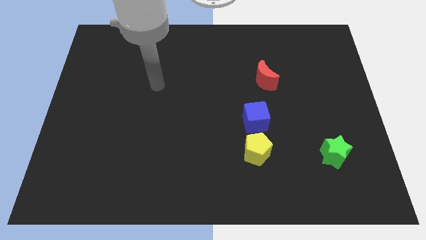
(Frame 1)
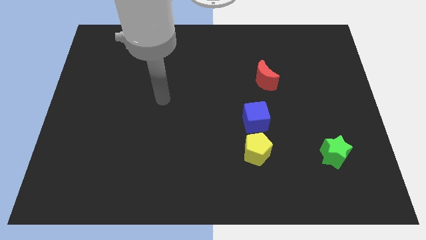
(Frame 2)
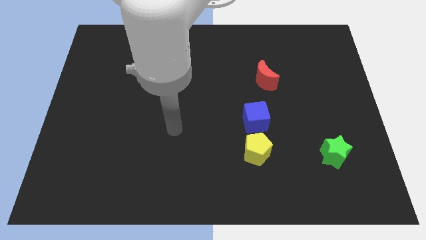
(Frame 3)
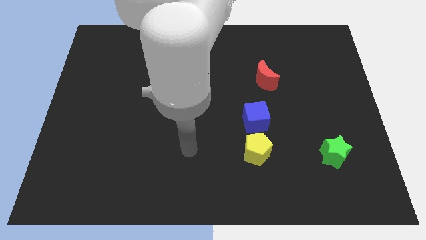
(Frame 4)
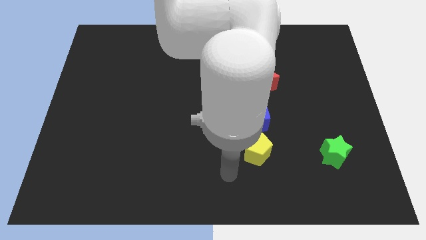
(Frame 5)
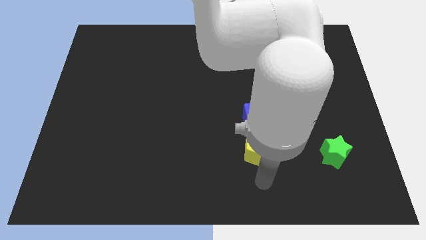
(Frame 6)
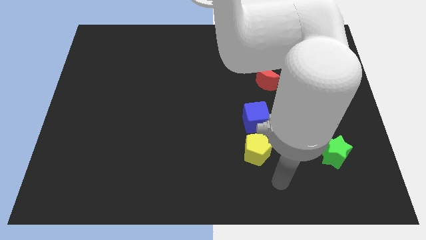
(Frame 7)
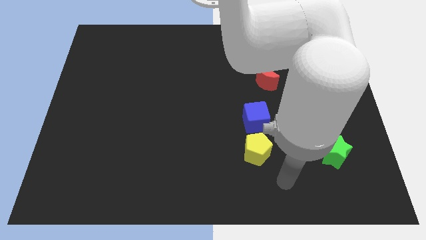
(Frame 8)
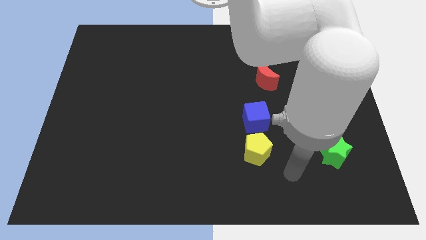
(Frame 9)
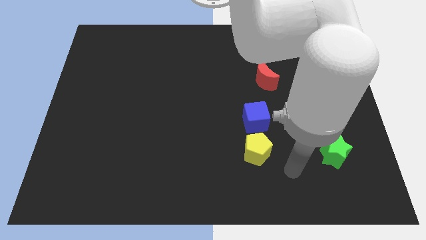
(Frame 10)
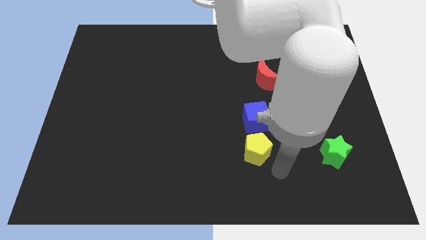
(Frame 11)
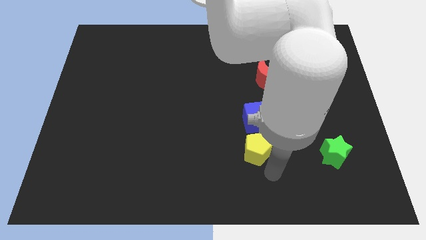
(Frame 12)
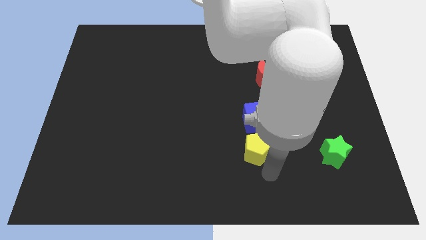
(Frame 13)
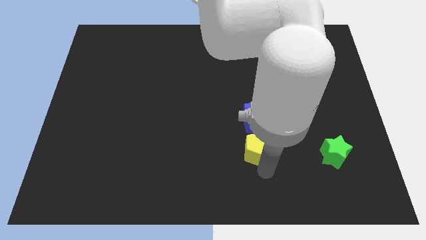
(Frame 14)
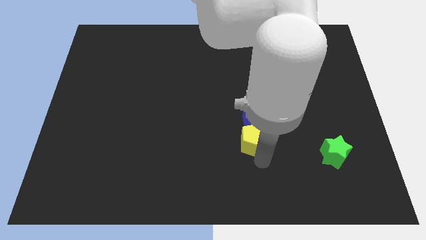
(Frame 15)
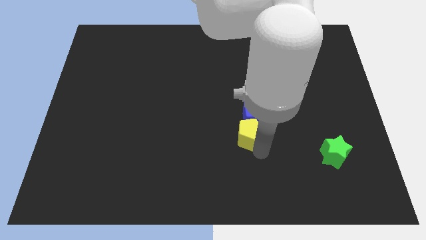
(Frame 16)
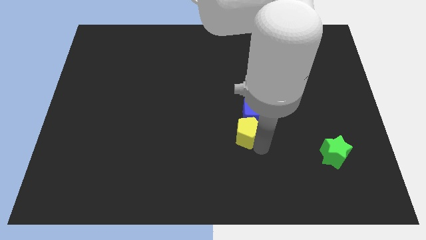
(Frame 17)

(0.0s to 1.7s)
move the pentagon close to the blue cube

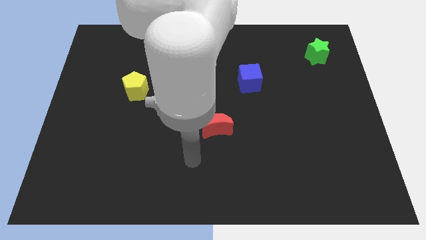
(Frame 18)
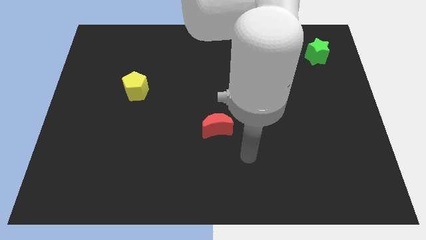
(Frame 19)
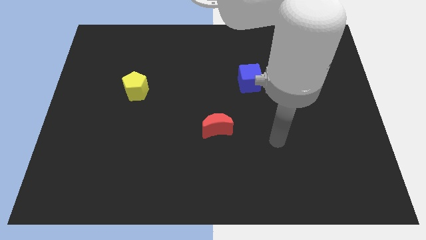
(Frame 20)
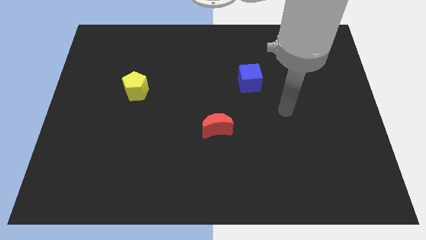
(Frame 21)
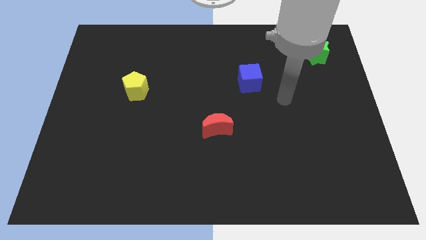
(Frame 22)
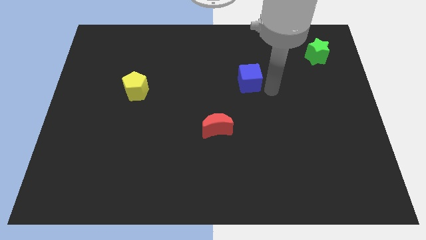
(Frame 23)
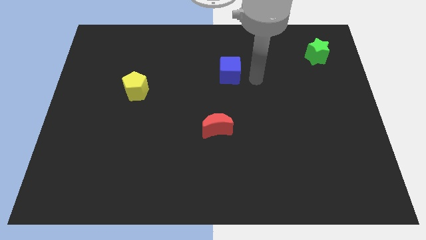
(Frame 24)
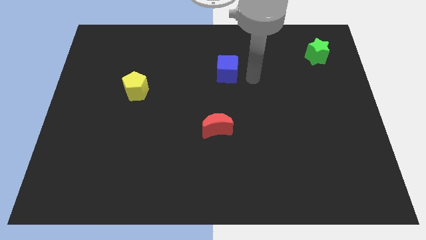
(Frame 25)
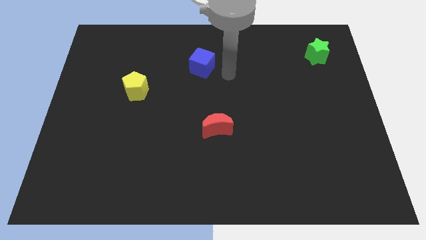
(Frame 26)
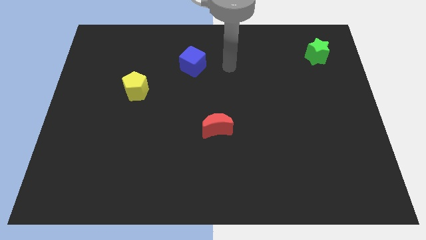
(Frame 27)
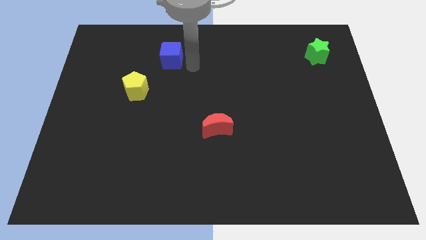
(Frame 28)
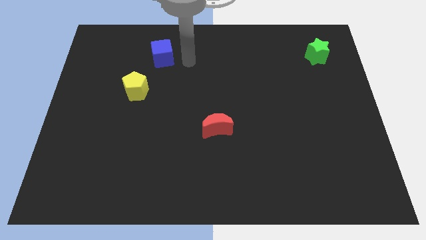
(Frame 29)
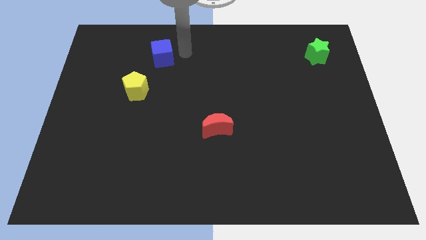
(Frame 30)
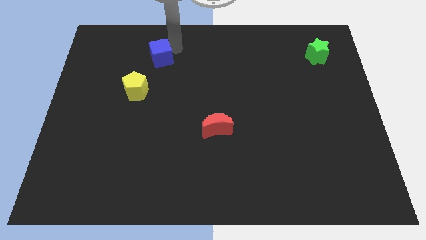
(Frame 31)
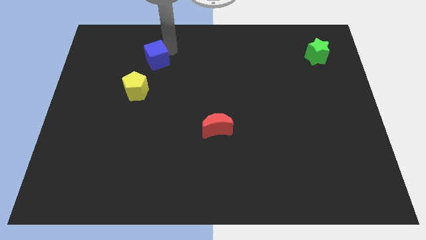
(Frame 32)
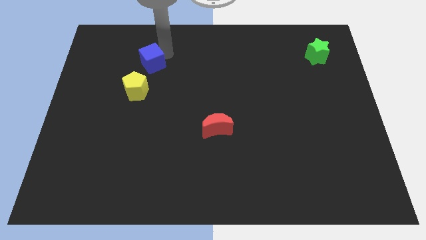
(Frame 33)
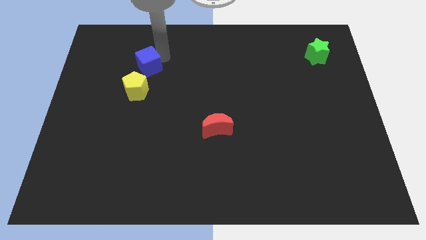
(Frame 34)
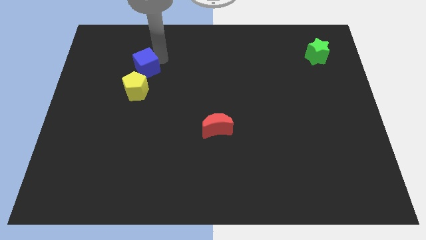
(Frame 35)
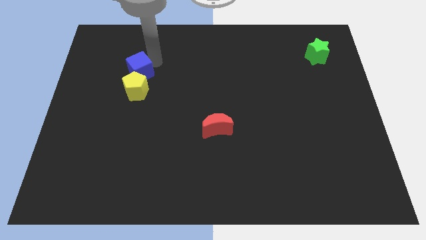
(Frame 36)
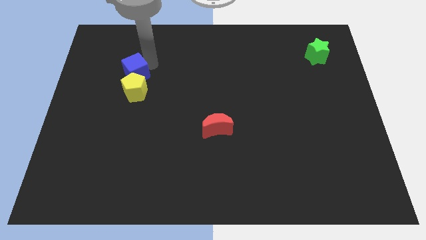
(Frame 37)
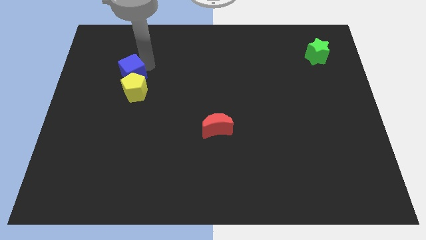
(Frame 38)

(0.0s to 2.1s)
put the blue cube next to the yellow pentagon

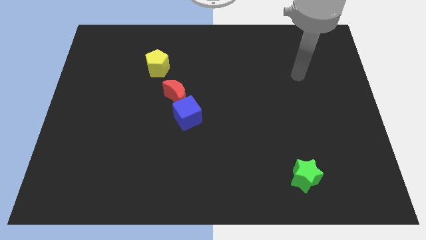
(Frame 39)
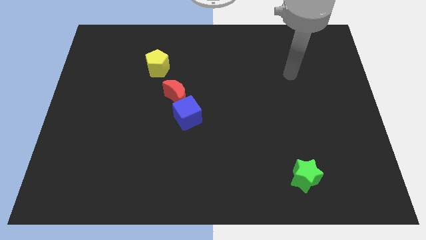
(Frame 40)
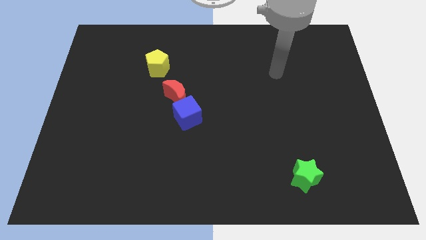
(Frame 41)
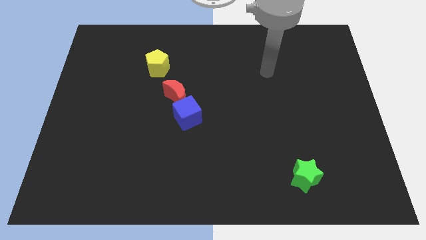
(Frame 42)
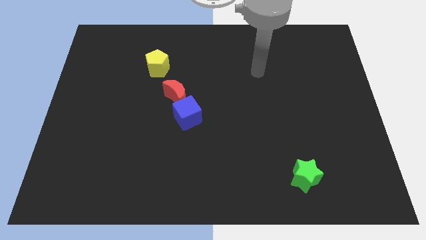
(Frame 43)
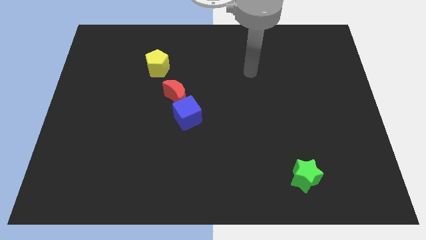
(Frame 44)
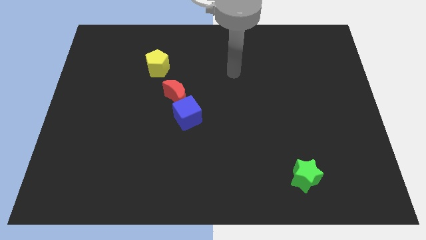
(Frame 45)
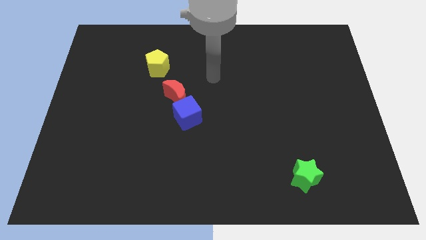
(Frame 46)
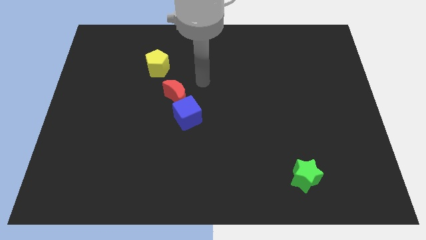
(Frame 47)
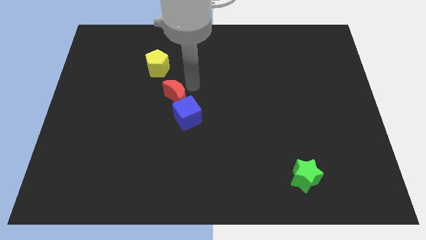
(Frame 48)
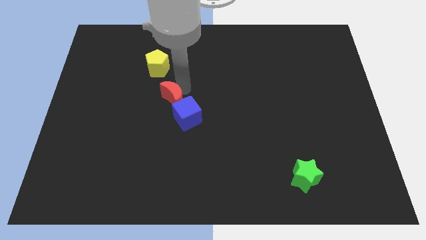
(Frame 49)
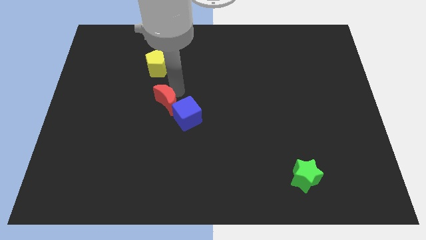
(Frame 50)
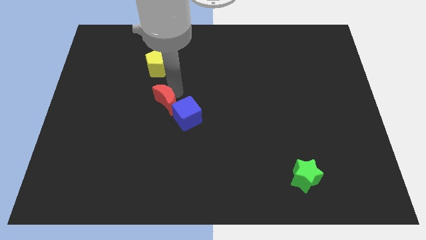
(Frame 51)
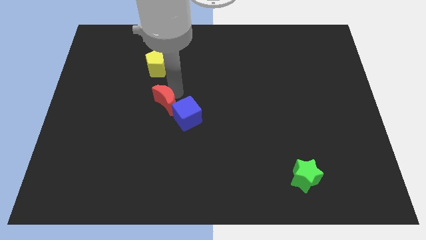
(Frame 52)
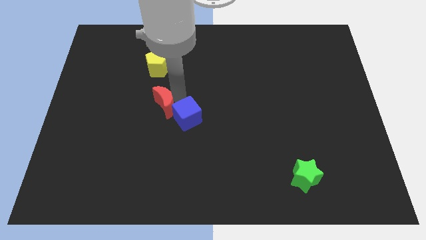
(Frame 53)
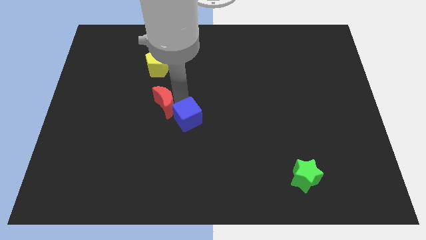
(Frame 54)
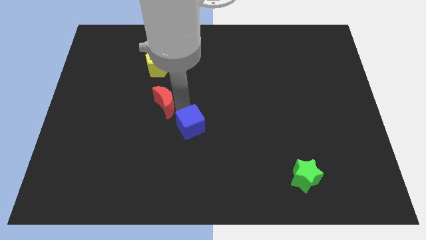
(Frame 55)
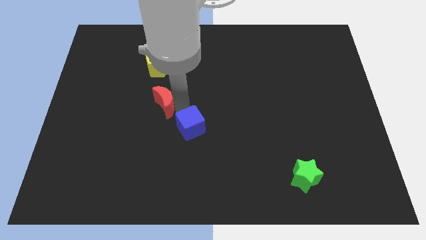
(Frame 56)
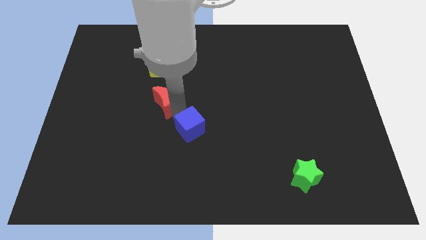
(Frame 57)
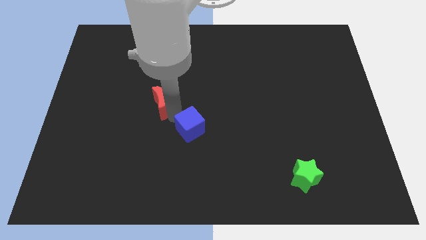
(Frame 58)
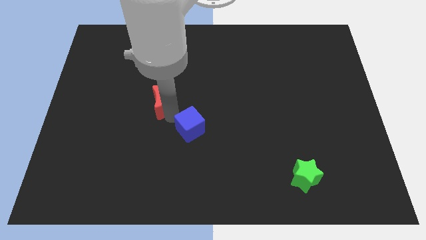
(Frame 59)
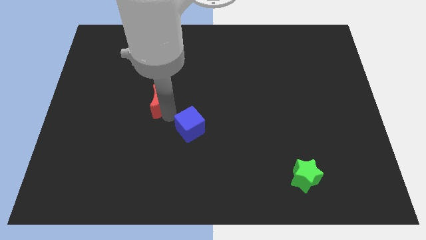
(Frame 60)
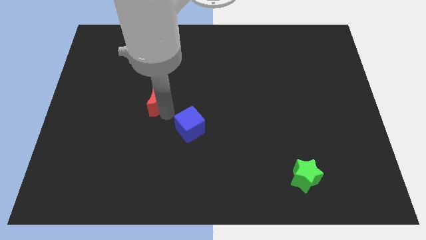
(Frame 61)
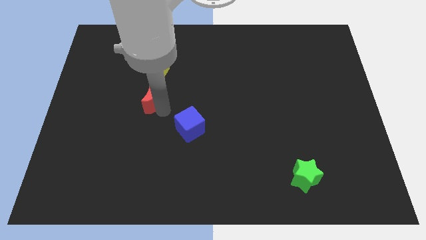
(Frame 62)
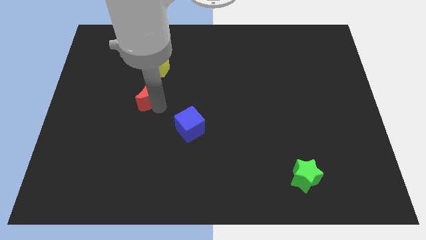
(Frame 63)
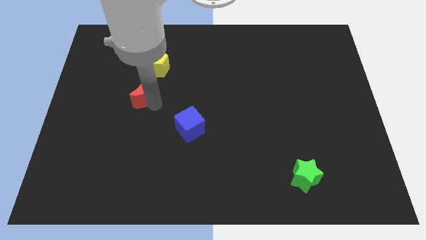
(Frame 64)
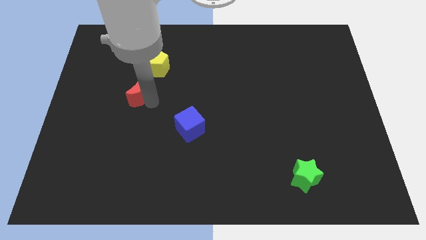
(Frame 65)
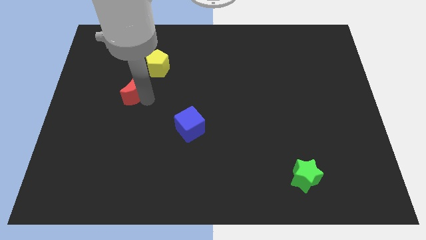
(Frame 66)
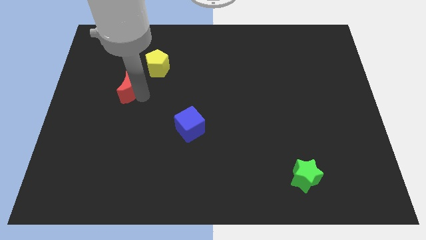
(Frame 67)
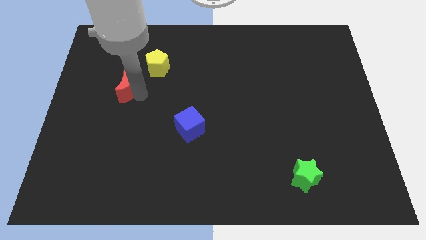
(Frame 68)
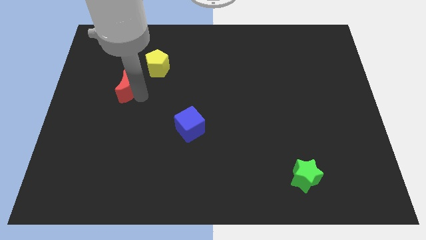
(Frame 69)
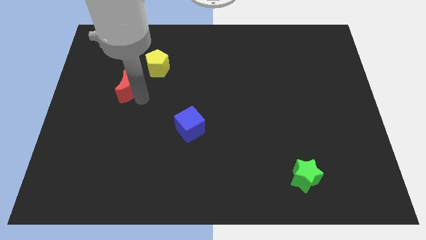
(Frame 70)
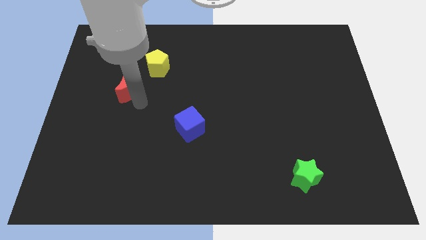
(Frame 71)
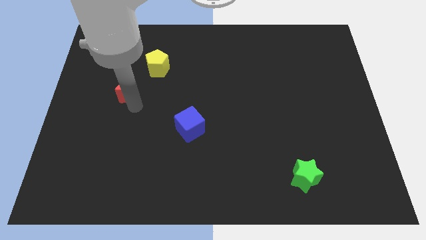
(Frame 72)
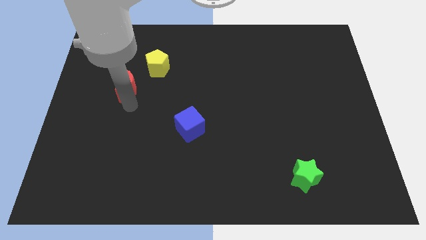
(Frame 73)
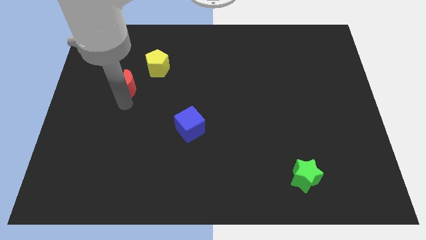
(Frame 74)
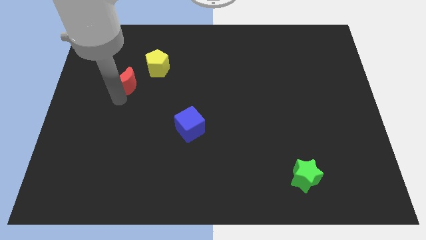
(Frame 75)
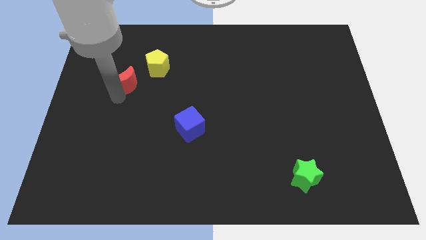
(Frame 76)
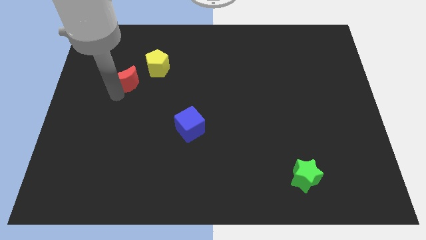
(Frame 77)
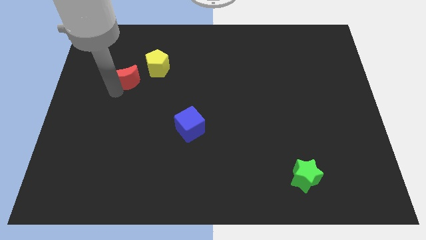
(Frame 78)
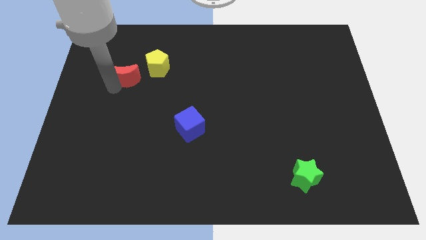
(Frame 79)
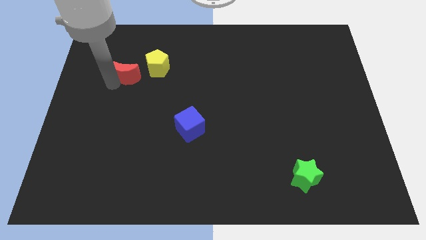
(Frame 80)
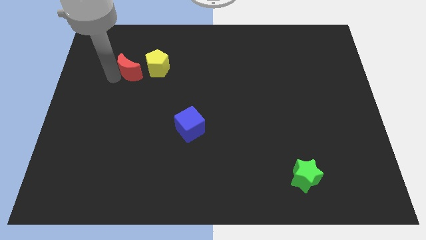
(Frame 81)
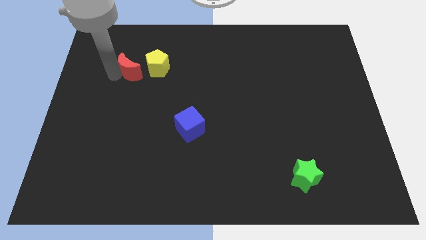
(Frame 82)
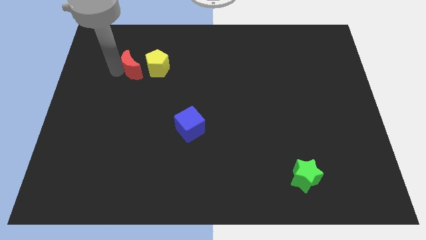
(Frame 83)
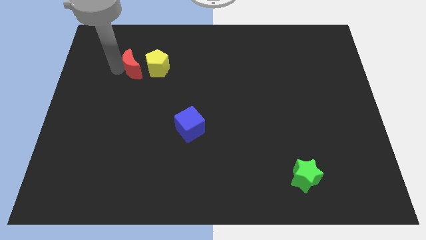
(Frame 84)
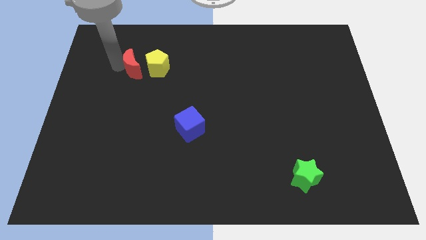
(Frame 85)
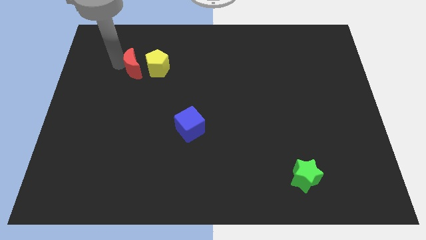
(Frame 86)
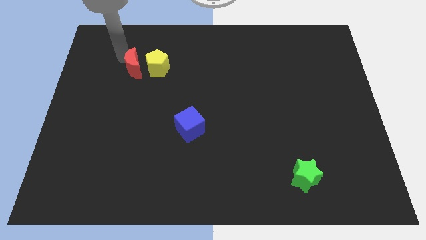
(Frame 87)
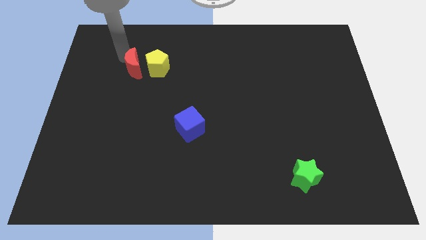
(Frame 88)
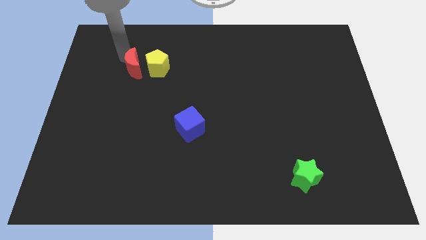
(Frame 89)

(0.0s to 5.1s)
put the red moon towards the yellow pentagon
